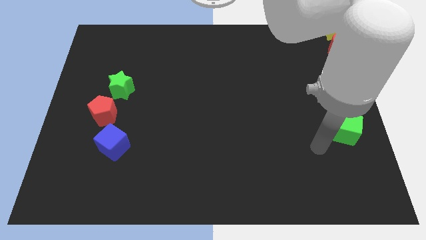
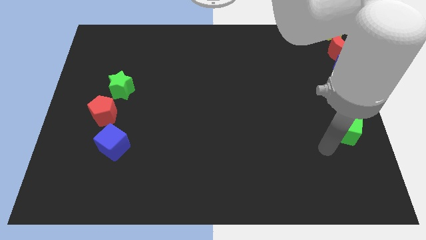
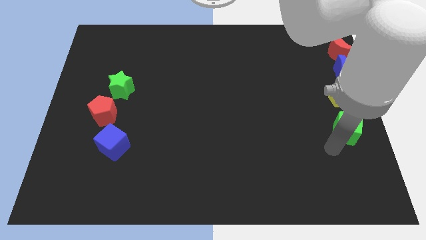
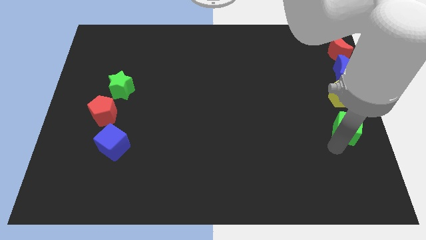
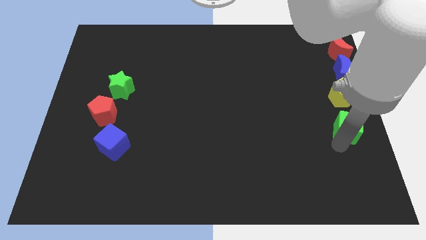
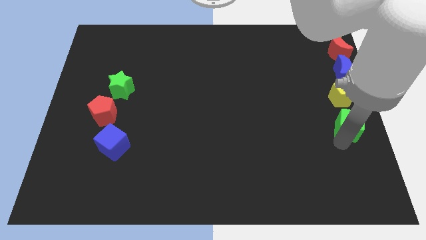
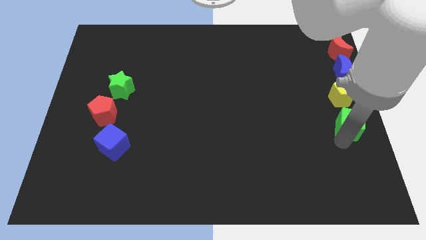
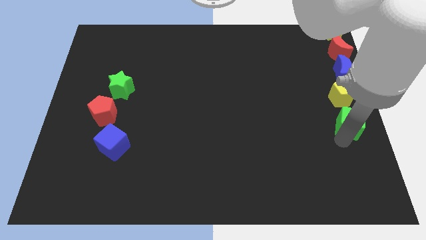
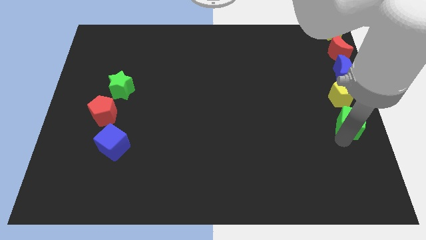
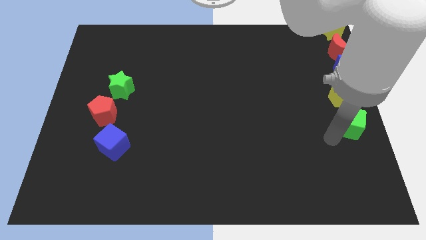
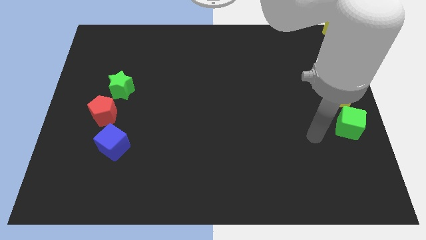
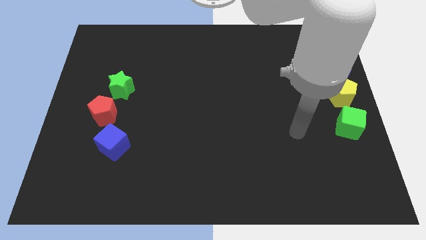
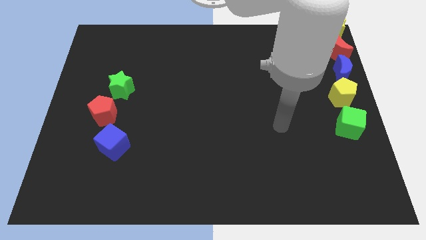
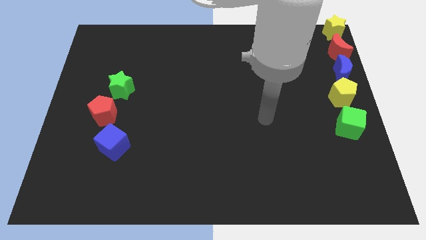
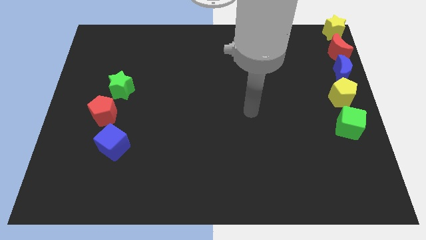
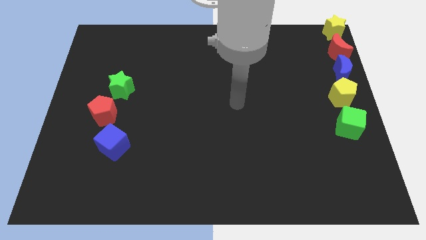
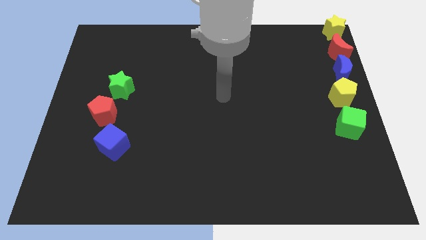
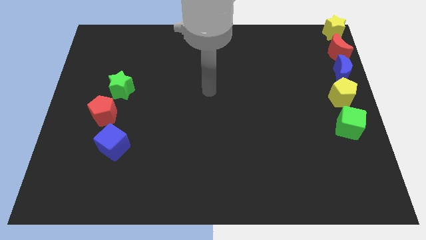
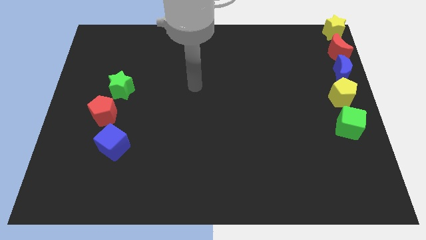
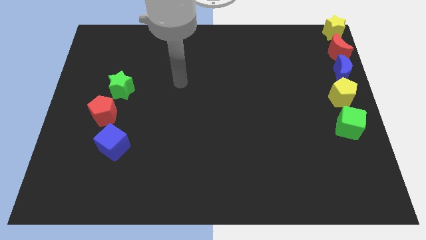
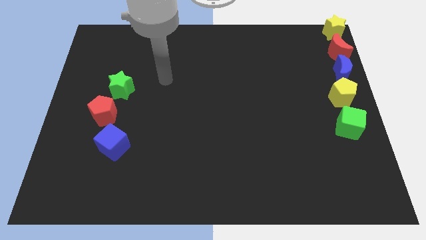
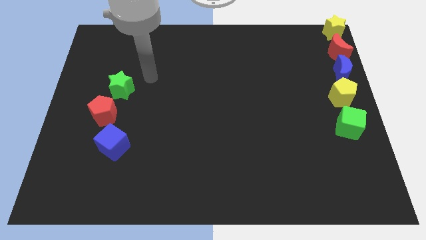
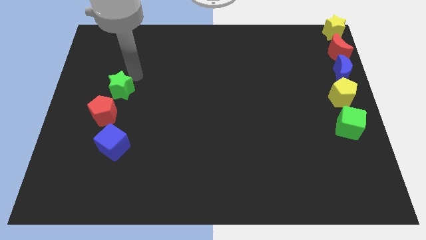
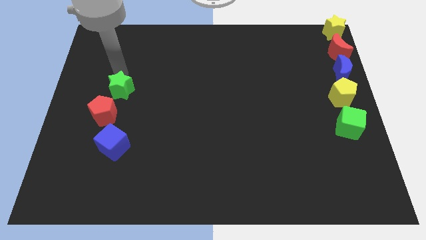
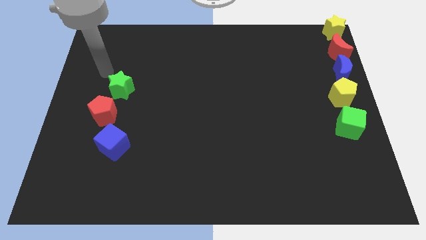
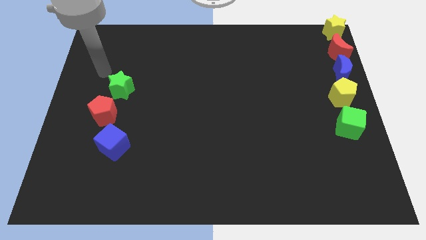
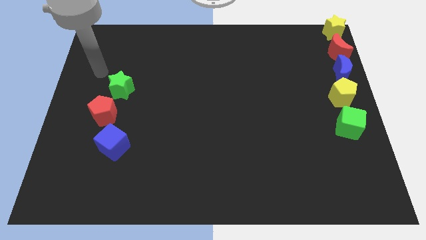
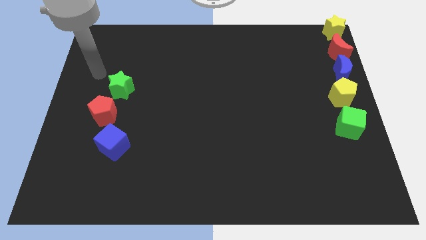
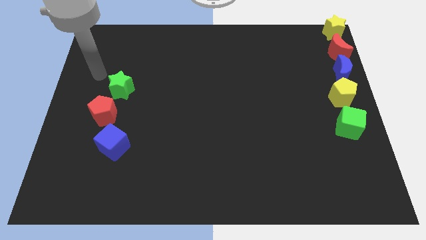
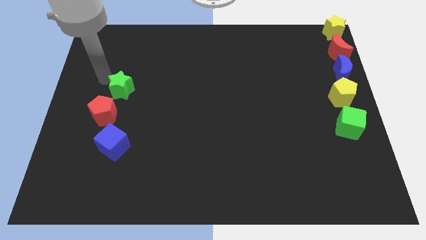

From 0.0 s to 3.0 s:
place the arm diagonally to the green star

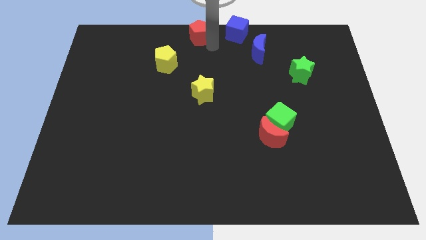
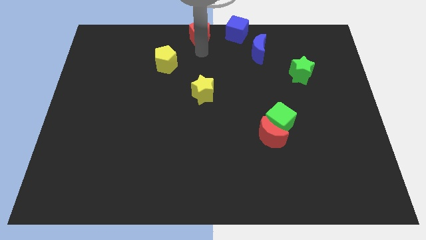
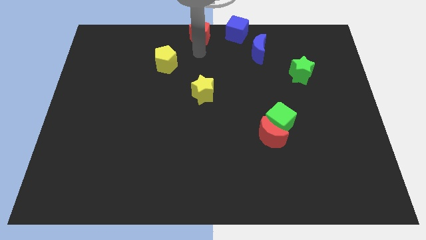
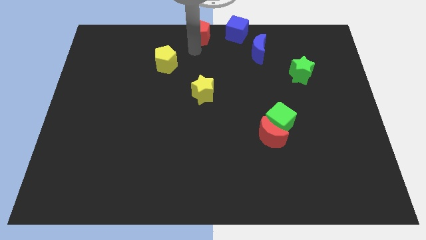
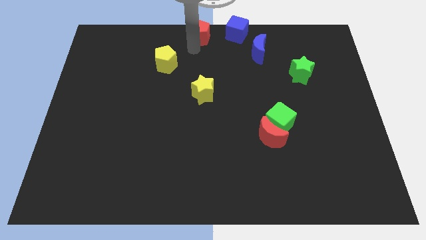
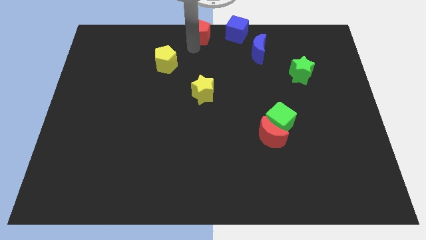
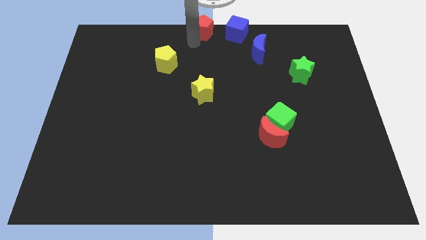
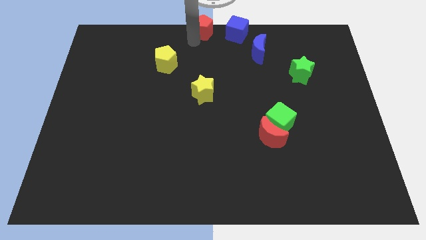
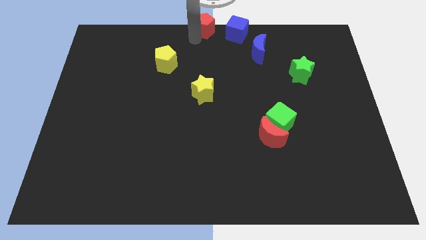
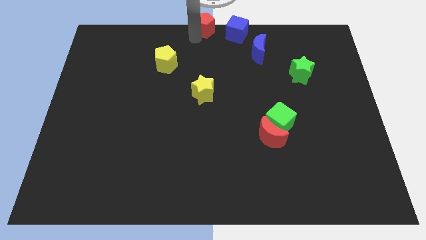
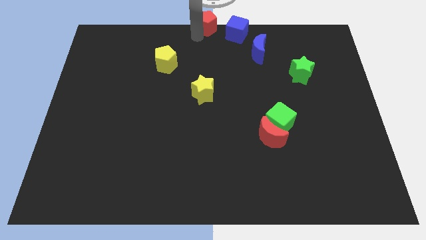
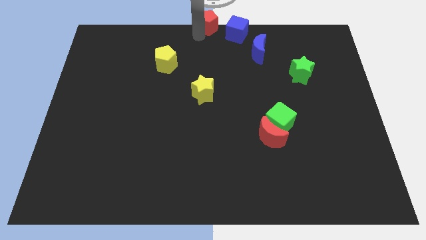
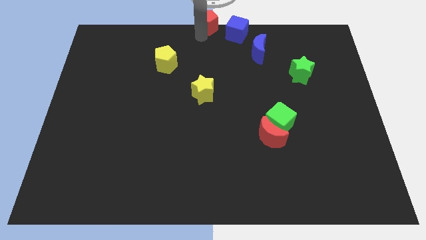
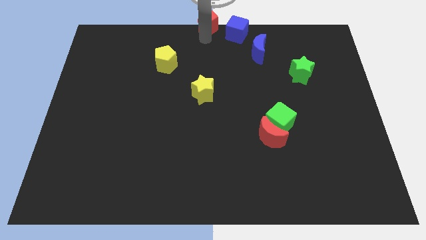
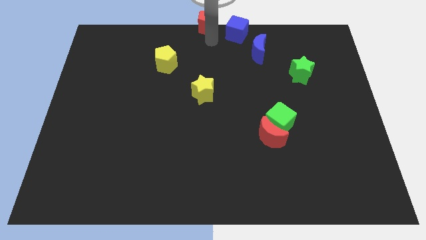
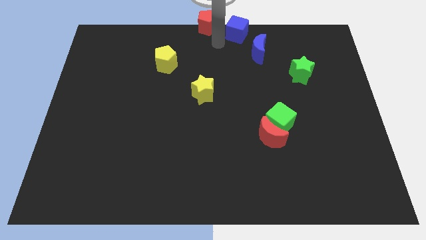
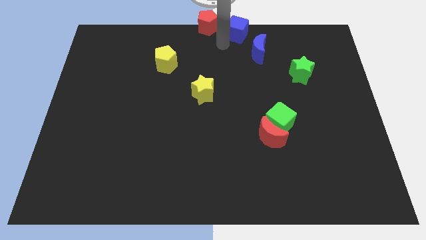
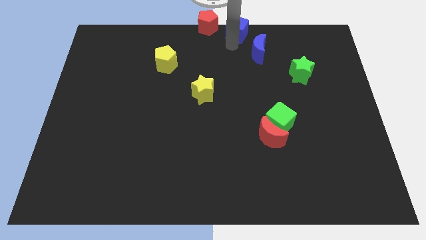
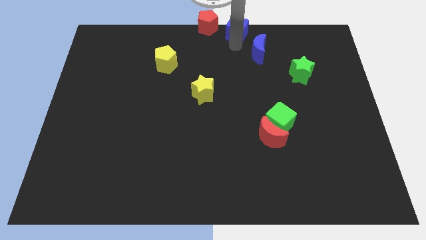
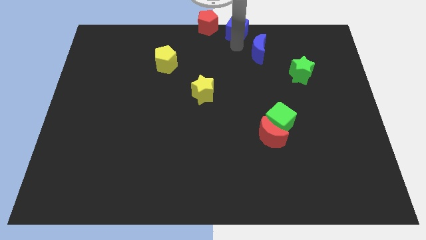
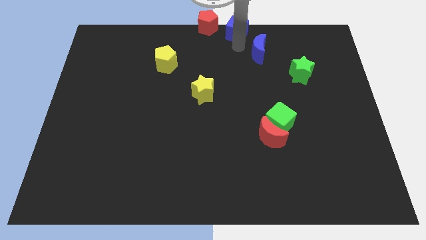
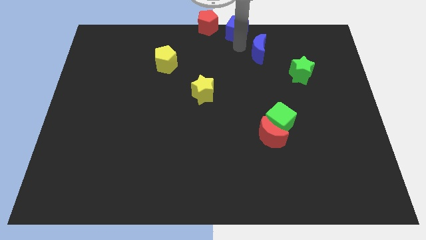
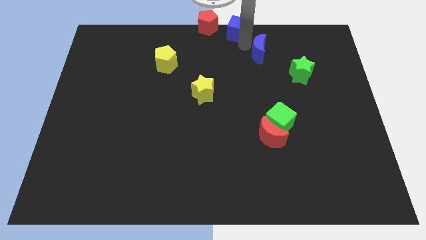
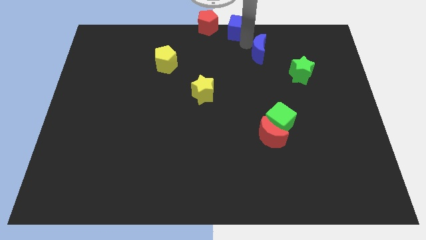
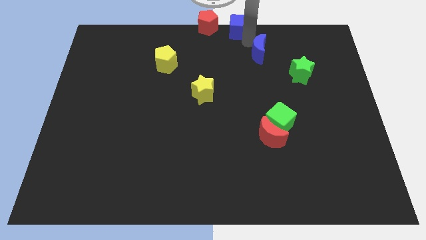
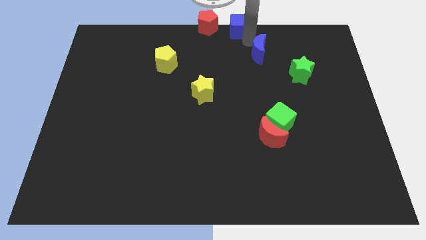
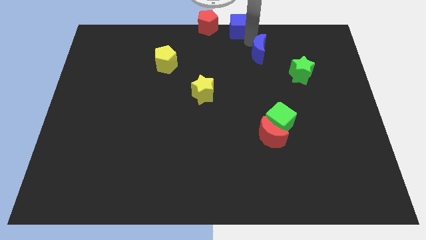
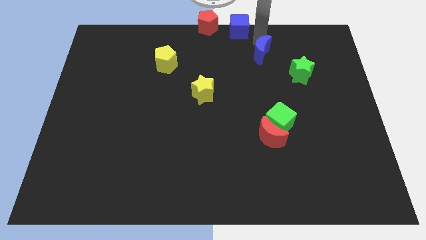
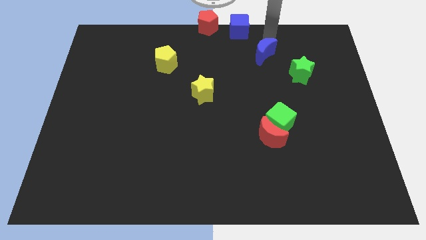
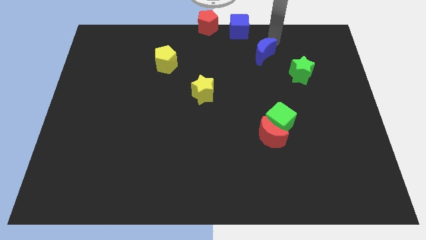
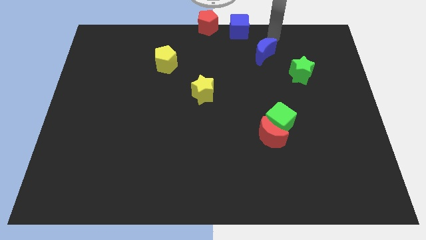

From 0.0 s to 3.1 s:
adjust the blue moon in between blue cube and green star

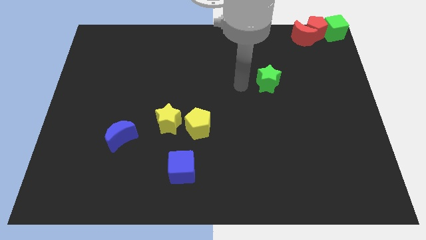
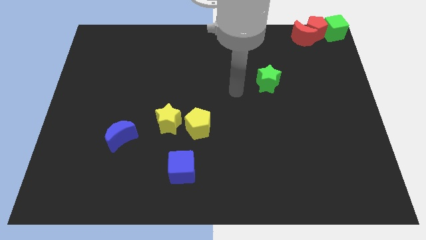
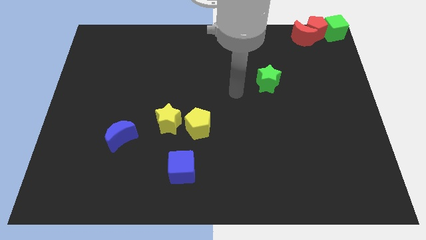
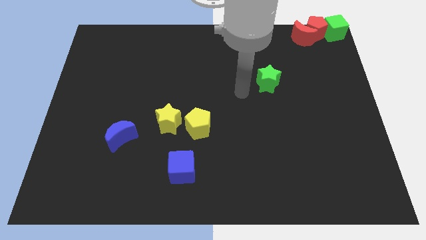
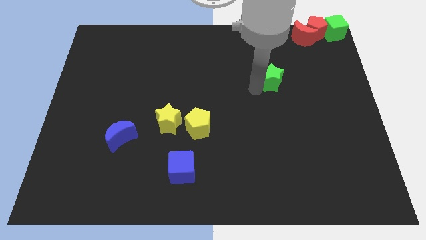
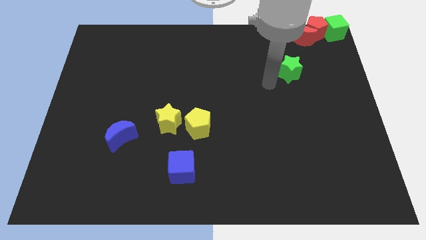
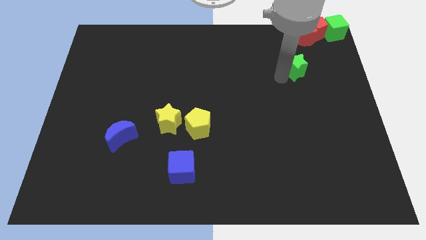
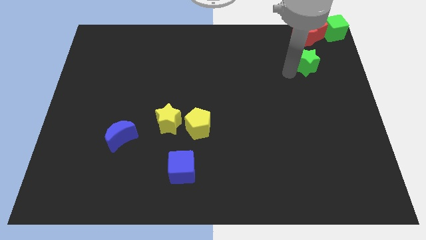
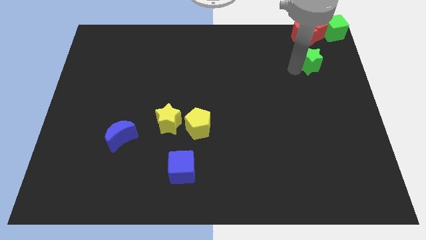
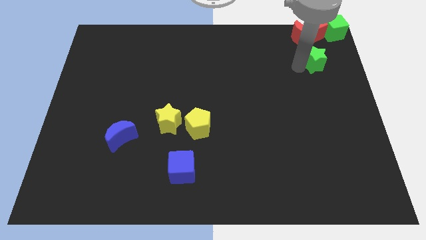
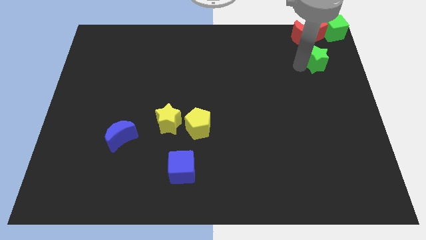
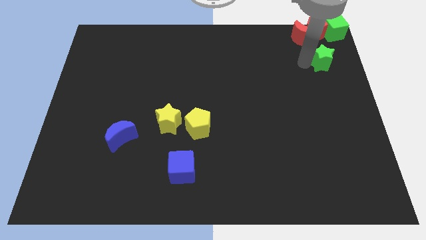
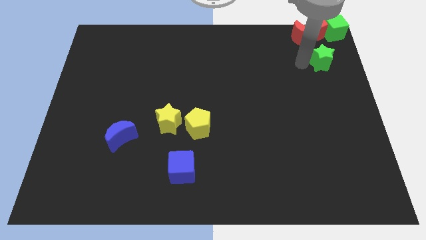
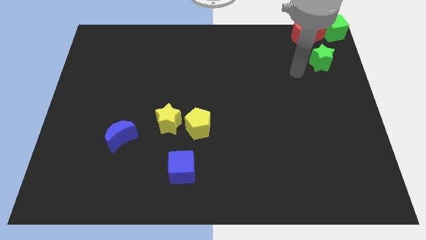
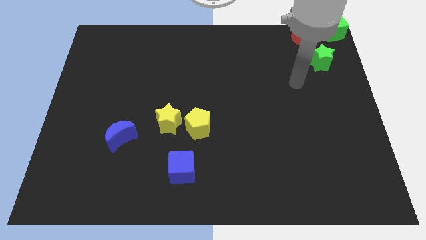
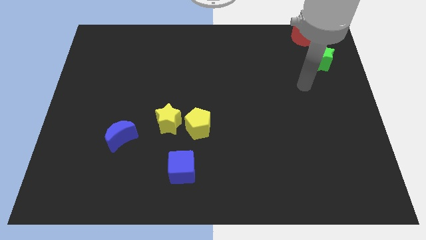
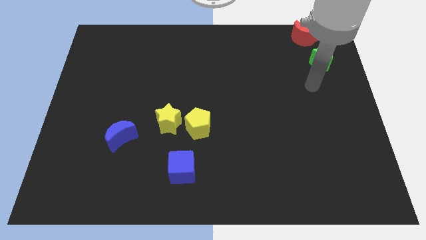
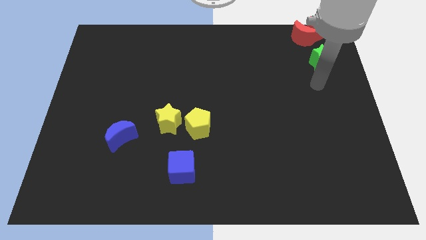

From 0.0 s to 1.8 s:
place the green star below the red moon and red pentagon

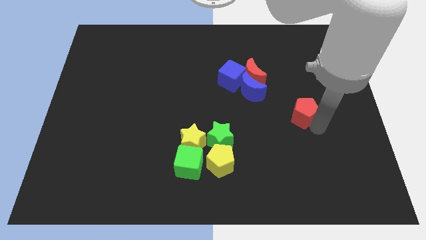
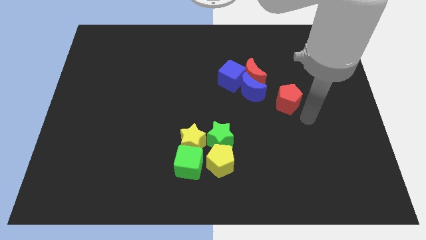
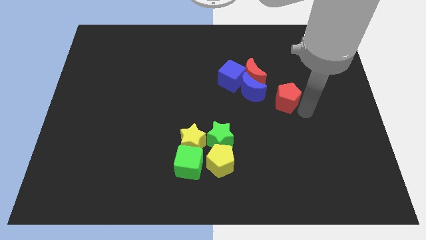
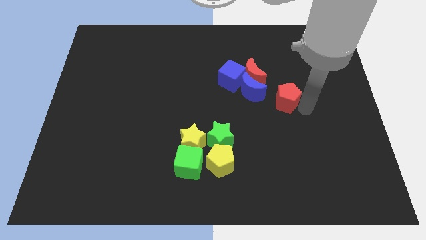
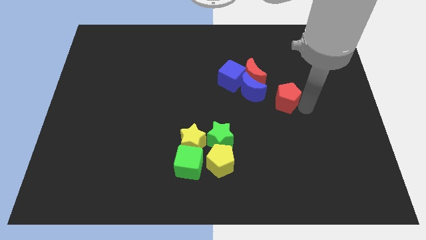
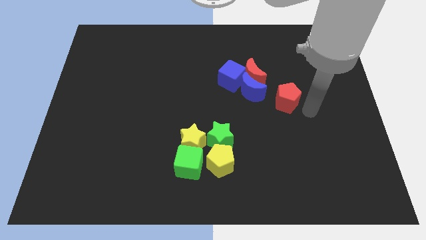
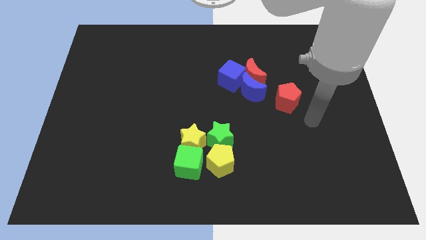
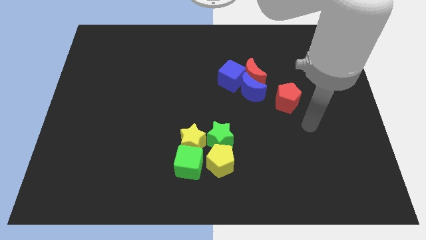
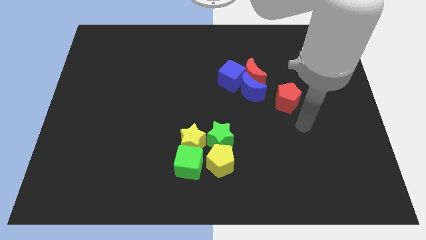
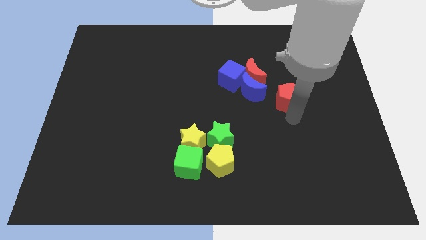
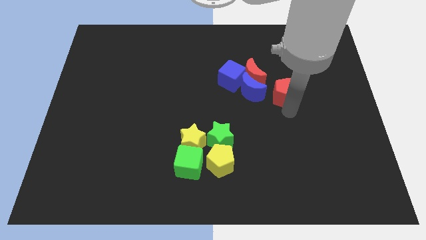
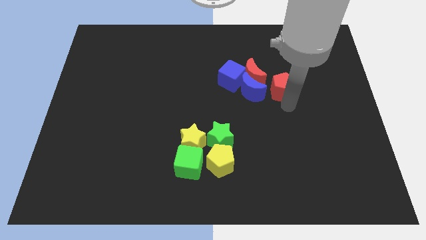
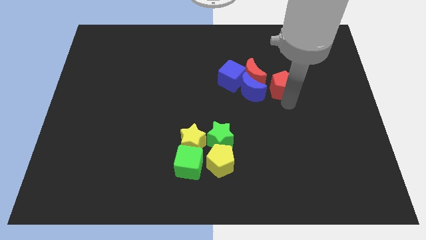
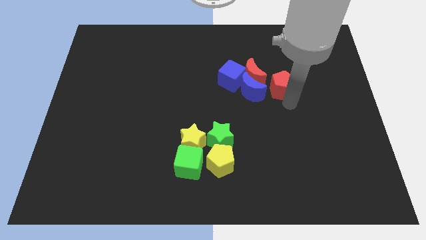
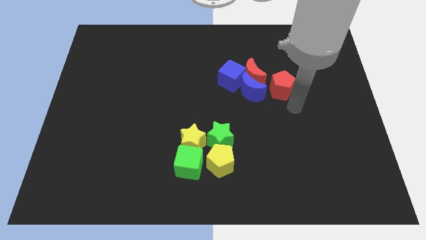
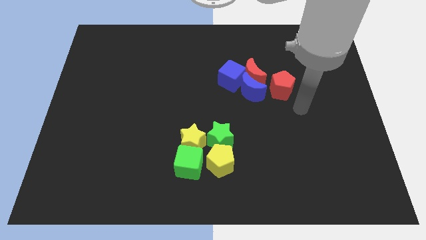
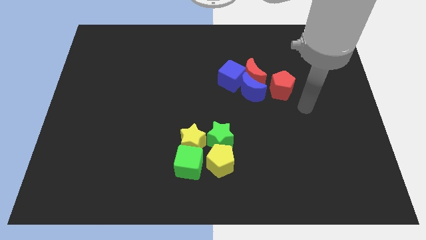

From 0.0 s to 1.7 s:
place the red pentagon right to the blue crescent
